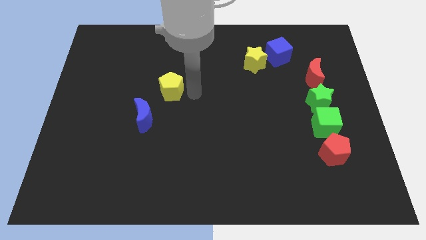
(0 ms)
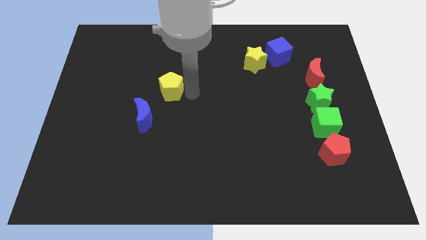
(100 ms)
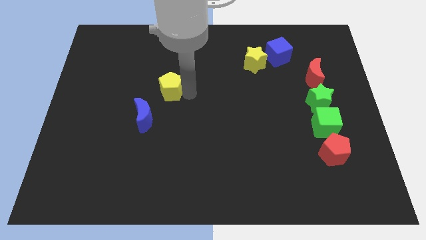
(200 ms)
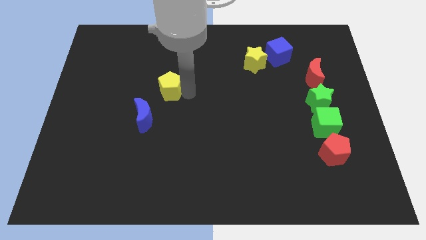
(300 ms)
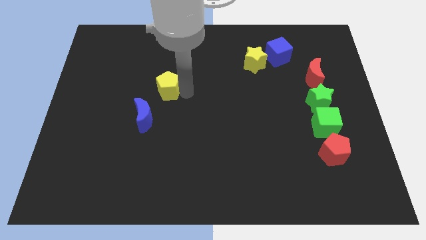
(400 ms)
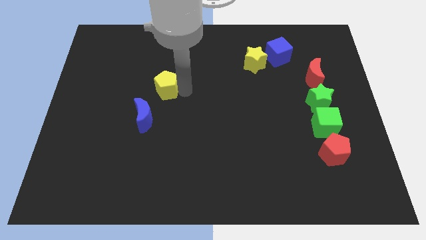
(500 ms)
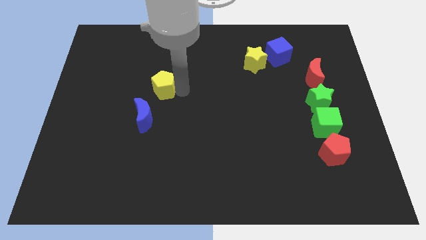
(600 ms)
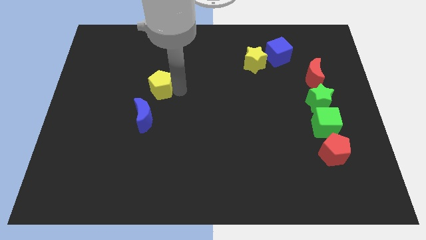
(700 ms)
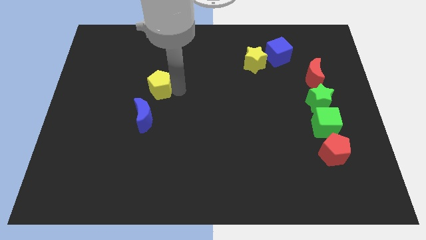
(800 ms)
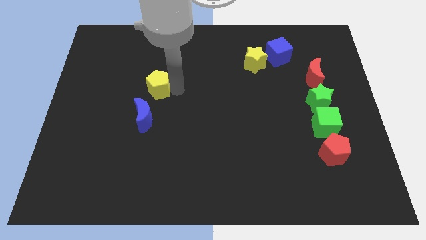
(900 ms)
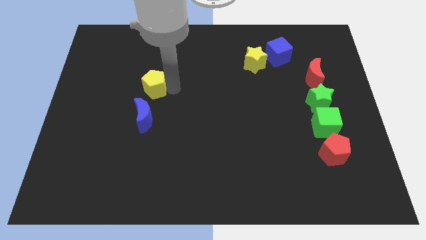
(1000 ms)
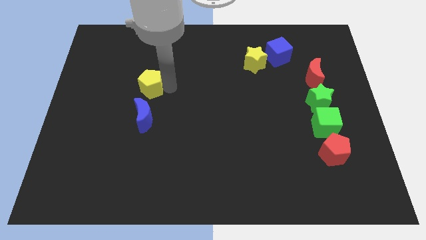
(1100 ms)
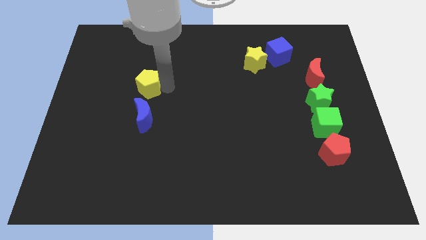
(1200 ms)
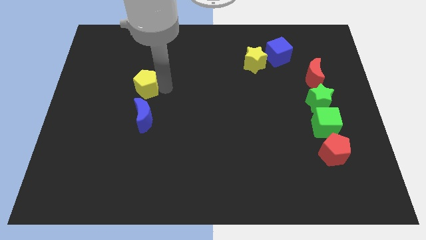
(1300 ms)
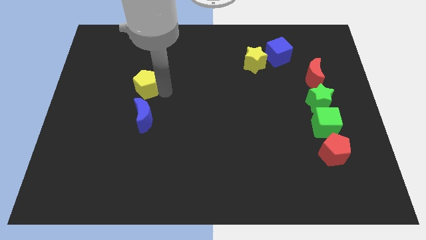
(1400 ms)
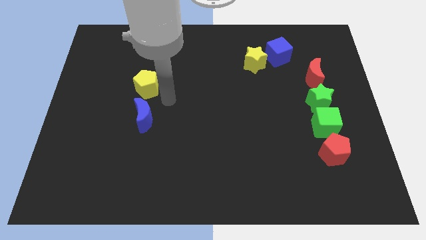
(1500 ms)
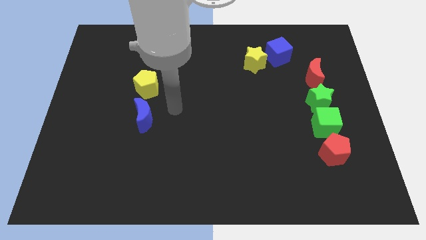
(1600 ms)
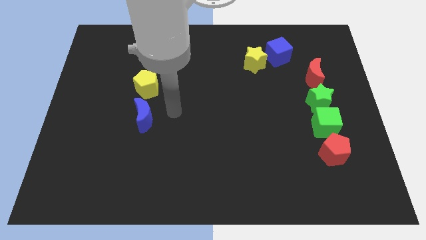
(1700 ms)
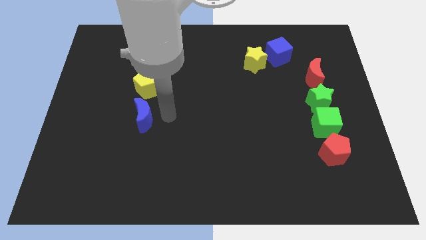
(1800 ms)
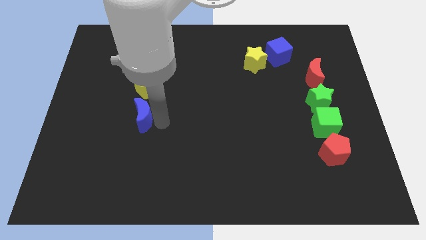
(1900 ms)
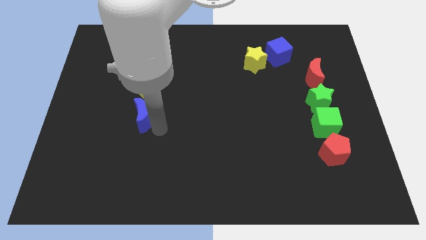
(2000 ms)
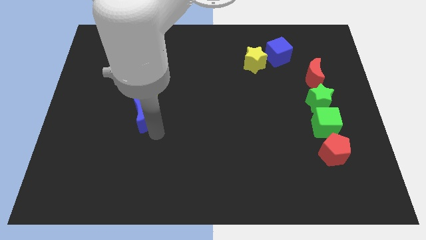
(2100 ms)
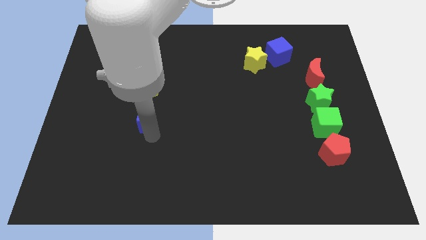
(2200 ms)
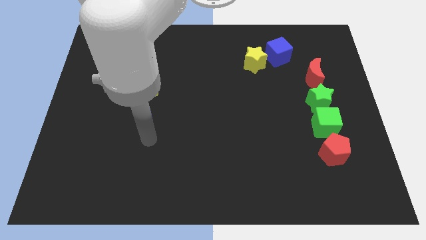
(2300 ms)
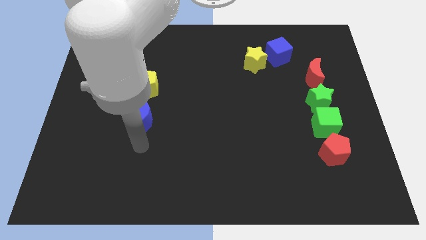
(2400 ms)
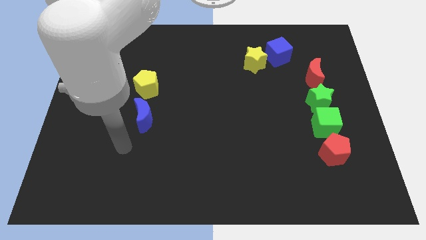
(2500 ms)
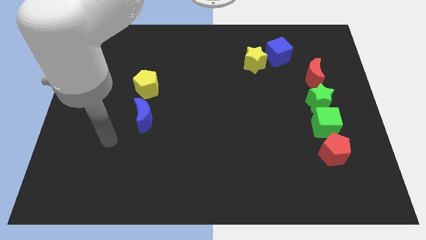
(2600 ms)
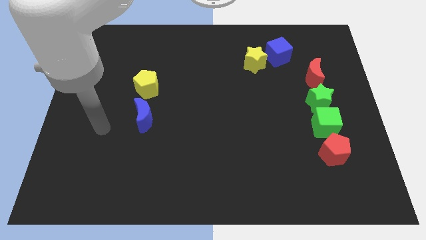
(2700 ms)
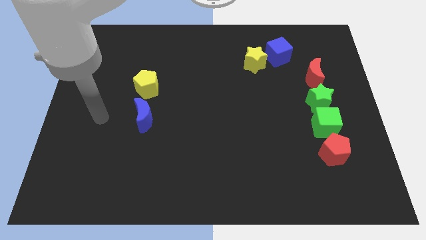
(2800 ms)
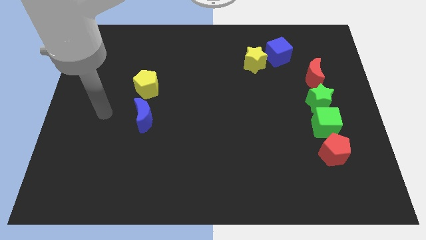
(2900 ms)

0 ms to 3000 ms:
place the yellow pentagon at the top of blue crescent

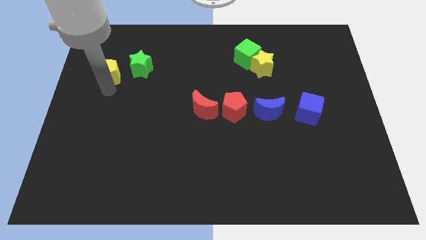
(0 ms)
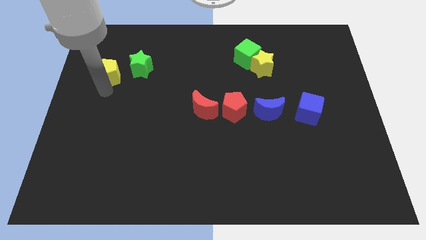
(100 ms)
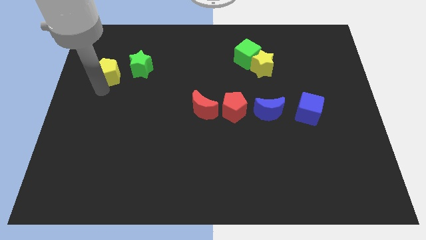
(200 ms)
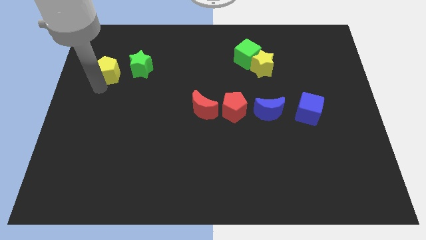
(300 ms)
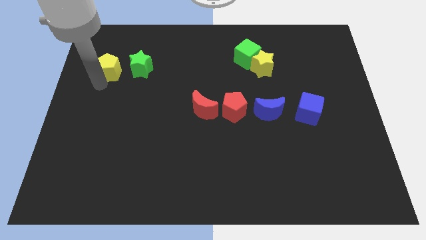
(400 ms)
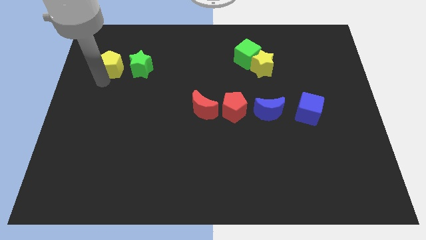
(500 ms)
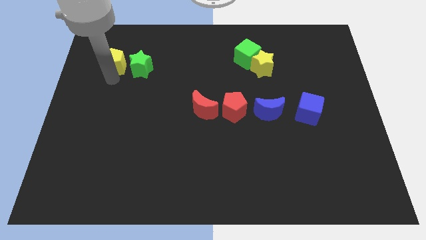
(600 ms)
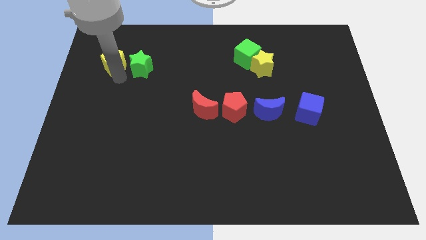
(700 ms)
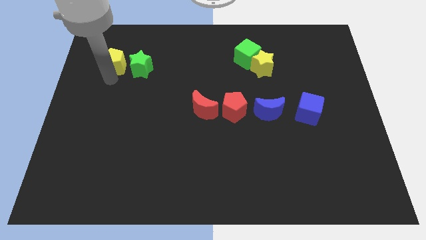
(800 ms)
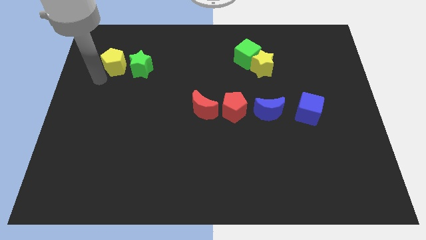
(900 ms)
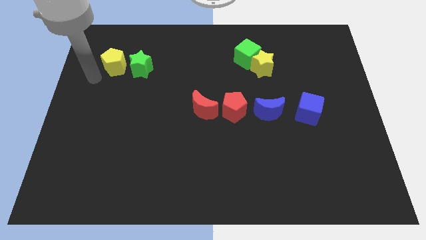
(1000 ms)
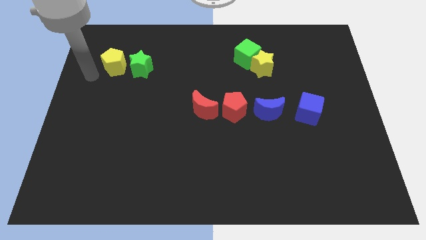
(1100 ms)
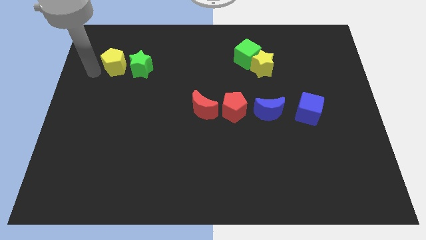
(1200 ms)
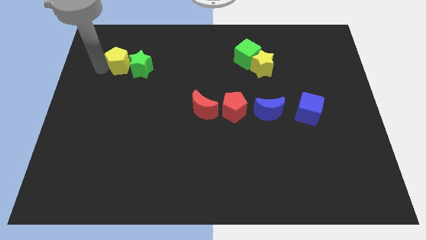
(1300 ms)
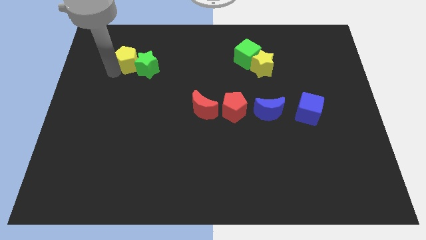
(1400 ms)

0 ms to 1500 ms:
push the yellow pentagon into the green star

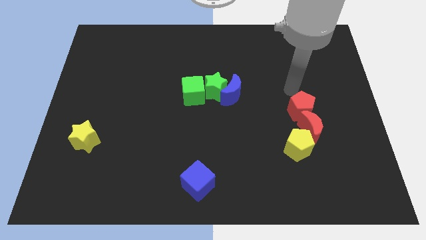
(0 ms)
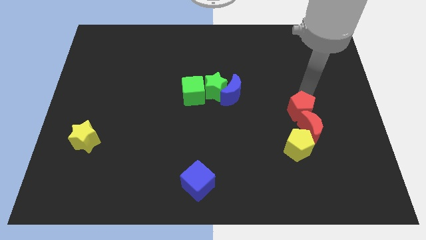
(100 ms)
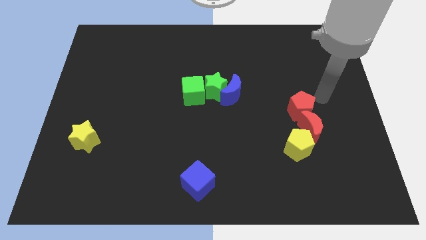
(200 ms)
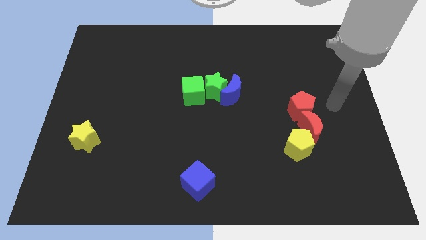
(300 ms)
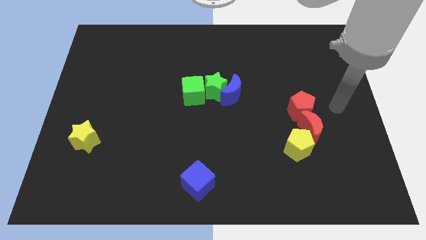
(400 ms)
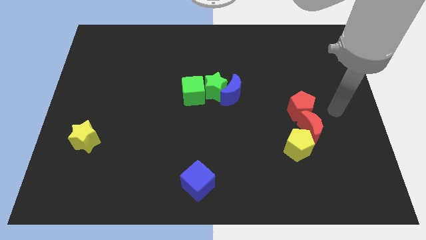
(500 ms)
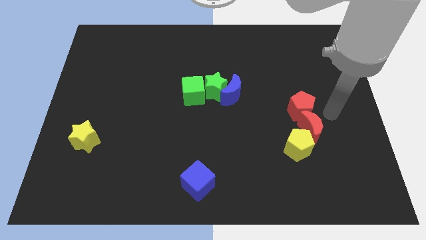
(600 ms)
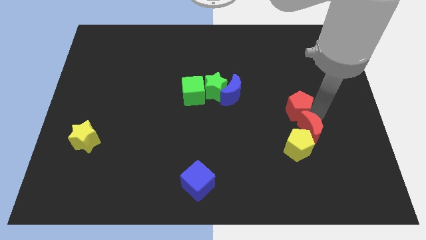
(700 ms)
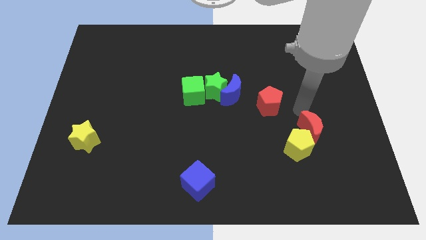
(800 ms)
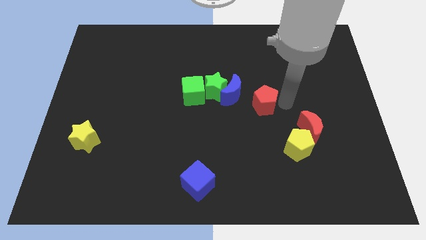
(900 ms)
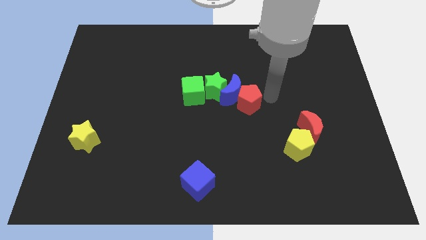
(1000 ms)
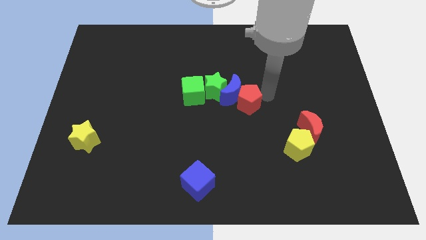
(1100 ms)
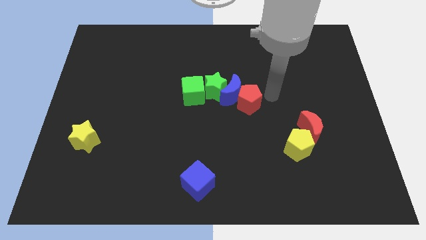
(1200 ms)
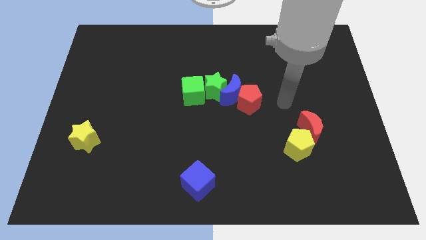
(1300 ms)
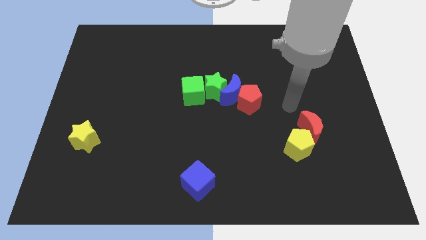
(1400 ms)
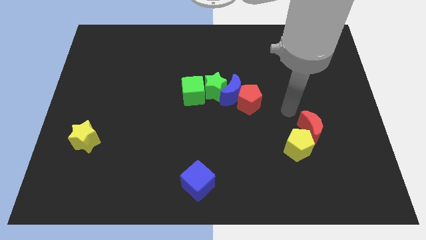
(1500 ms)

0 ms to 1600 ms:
slide the red pentagon into the blue moon

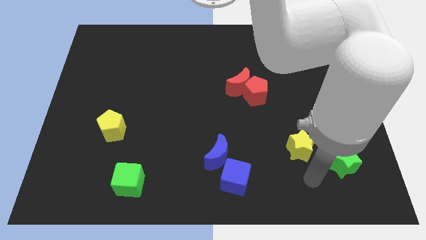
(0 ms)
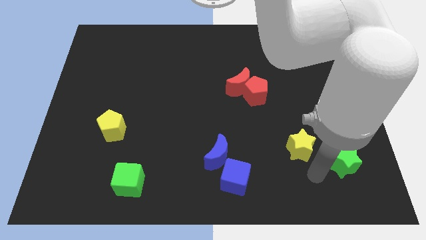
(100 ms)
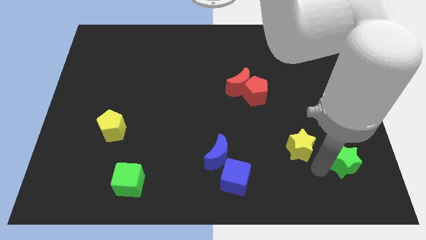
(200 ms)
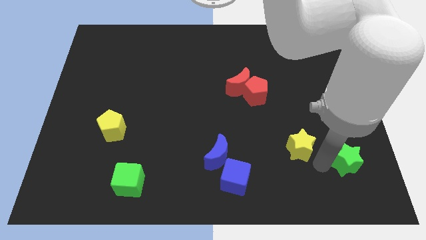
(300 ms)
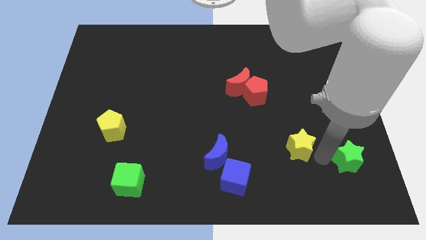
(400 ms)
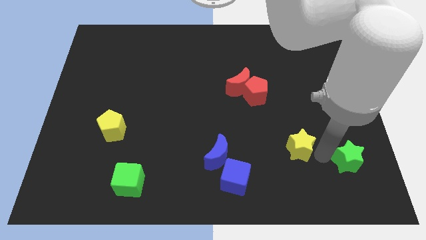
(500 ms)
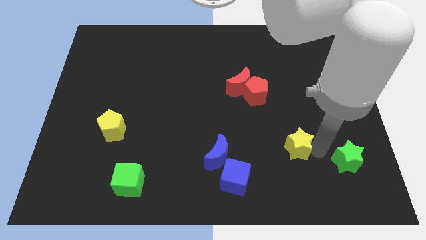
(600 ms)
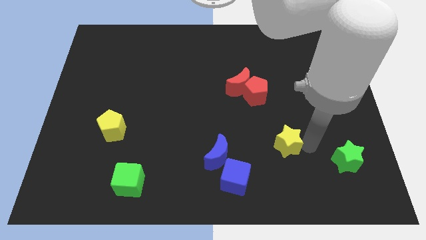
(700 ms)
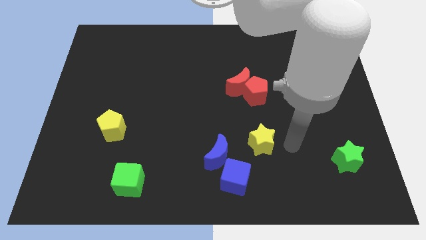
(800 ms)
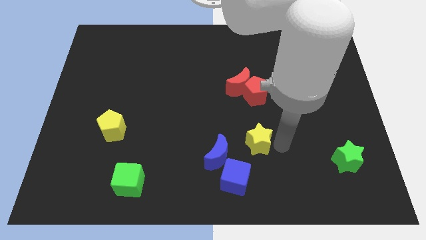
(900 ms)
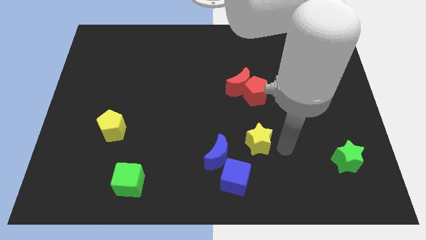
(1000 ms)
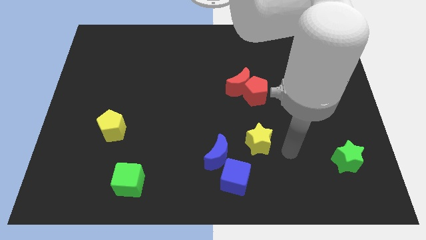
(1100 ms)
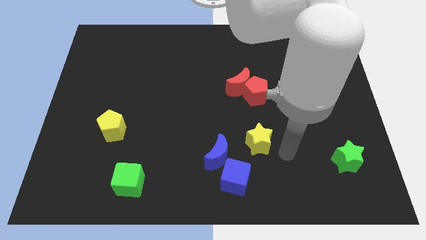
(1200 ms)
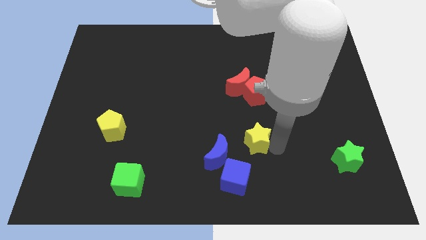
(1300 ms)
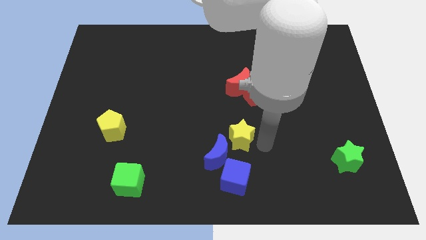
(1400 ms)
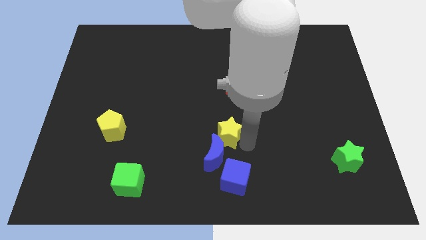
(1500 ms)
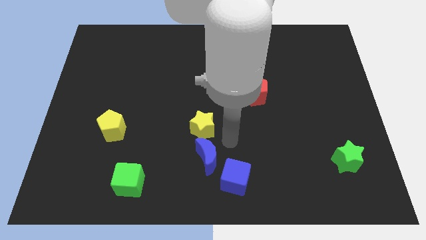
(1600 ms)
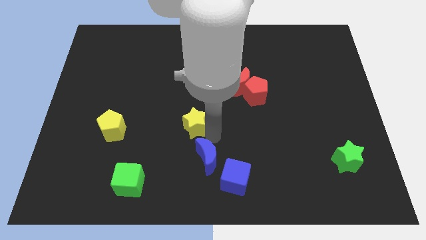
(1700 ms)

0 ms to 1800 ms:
push the yellow star diagonal above the blue moon

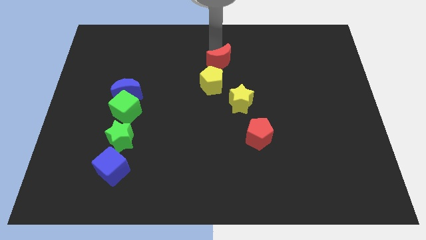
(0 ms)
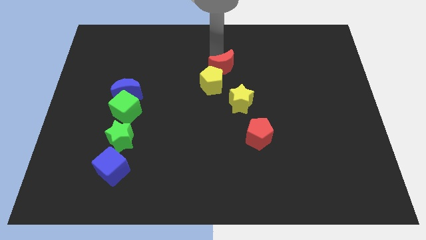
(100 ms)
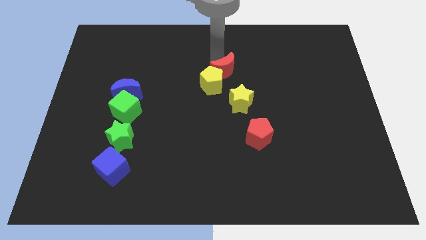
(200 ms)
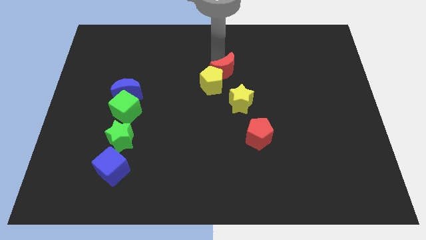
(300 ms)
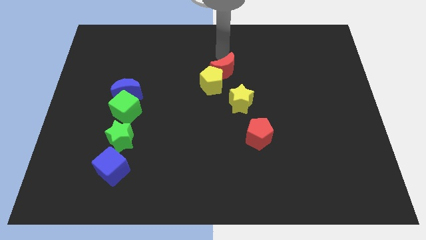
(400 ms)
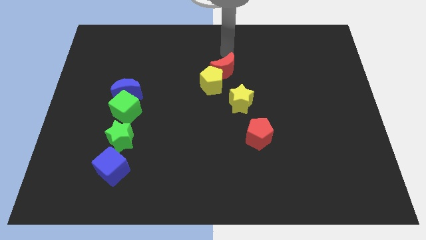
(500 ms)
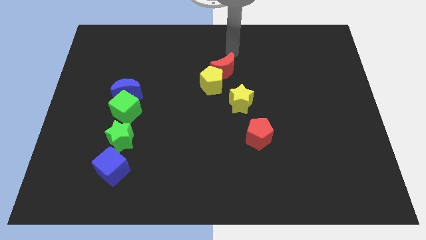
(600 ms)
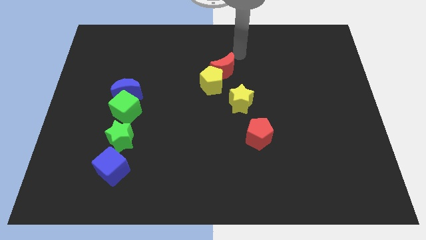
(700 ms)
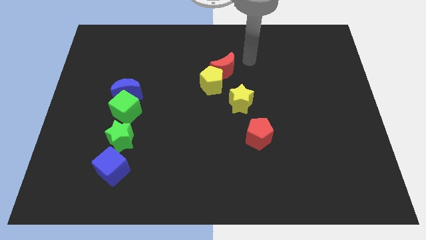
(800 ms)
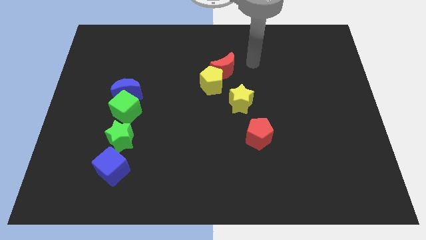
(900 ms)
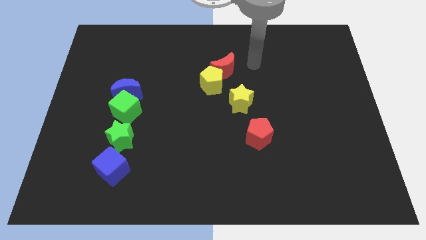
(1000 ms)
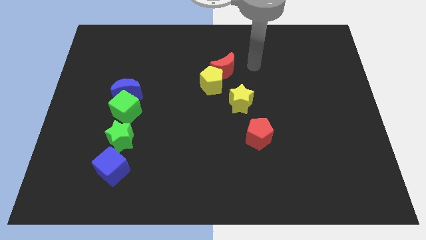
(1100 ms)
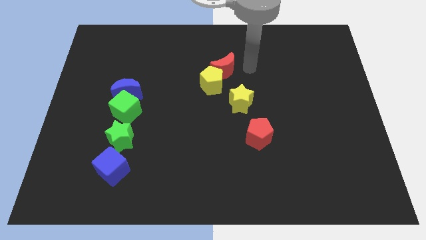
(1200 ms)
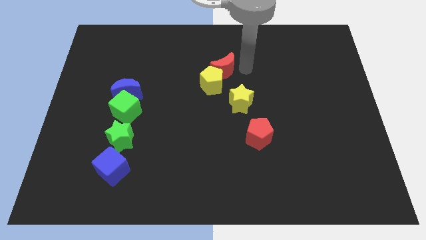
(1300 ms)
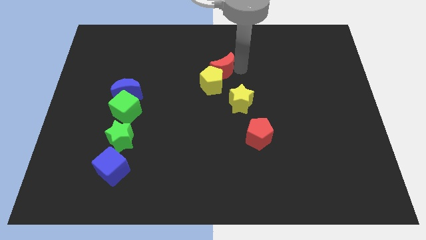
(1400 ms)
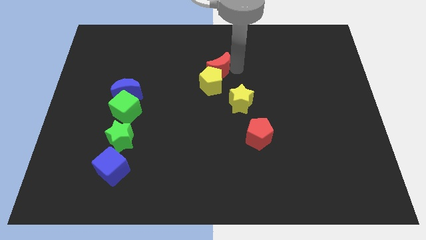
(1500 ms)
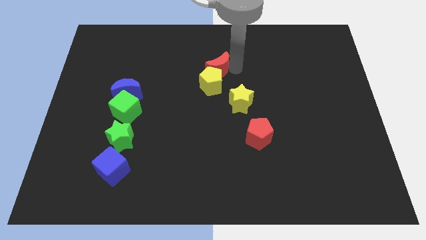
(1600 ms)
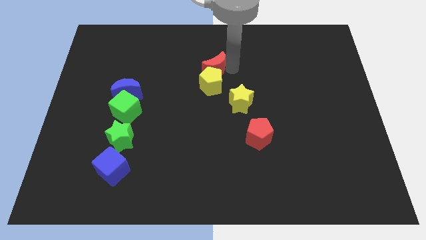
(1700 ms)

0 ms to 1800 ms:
move the red crescent into the top side of the yellow pentagon
